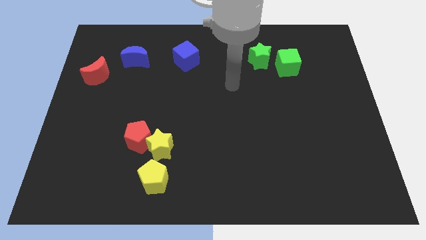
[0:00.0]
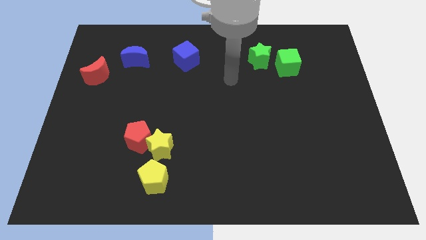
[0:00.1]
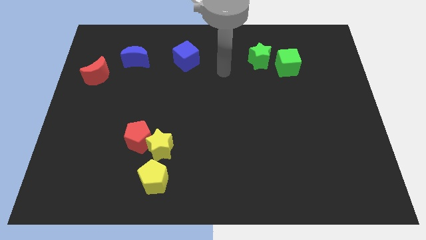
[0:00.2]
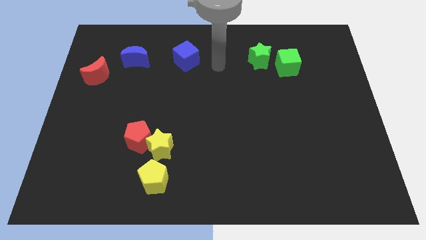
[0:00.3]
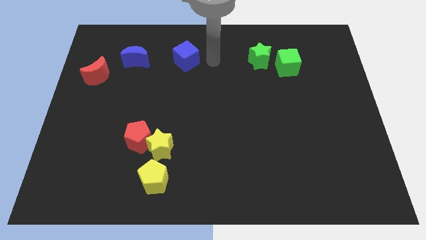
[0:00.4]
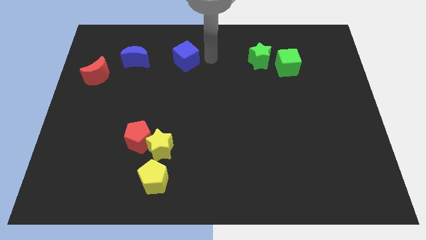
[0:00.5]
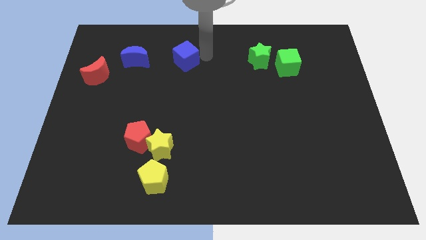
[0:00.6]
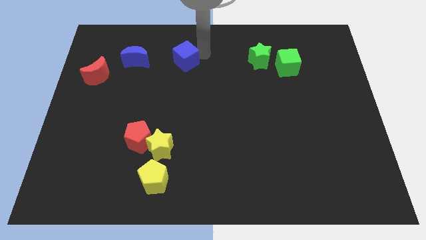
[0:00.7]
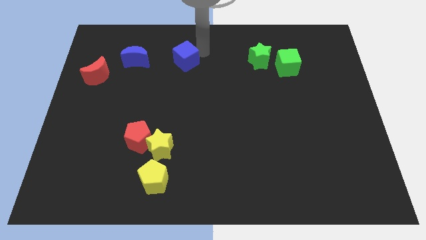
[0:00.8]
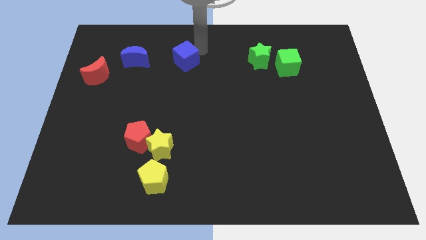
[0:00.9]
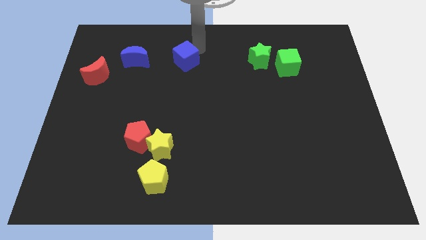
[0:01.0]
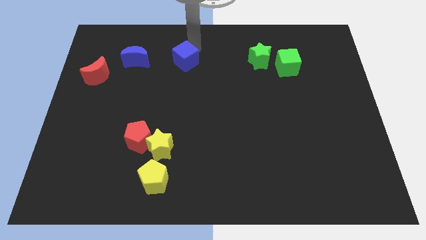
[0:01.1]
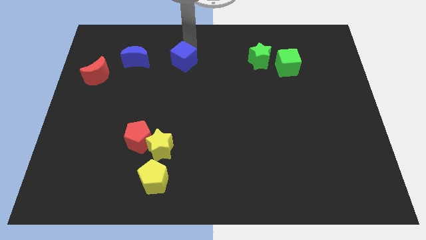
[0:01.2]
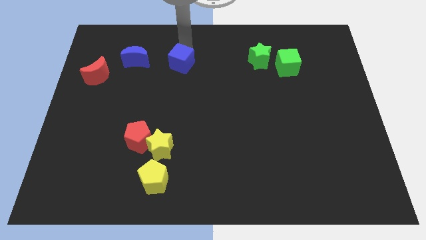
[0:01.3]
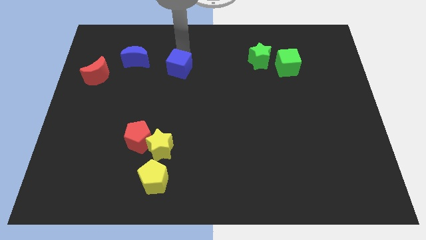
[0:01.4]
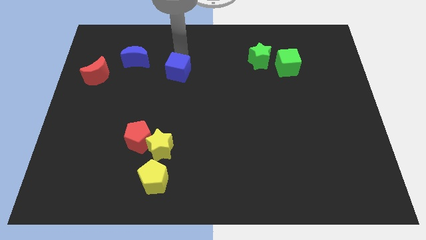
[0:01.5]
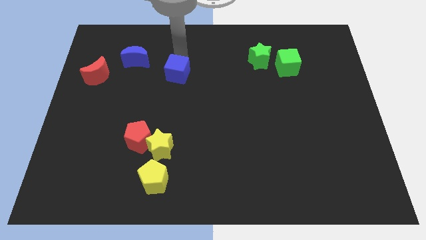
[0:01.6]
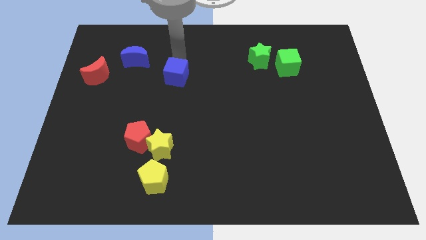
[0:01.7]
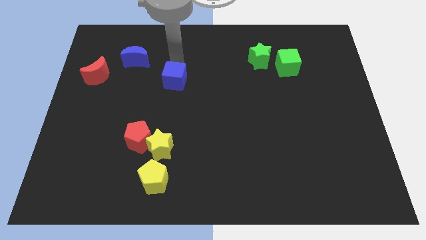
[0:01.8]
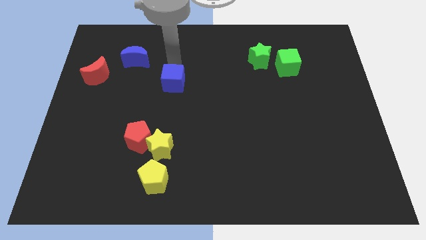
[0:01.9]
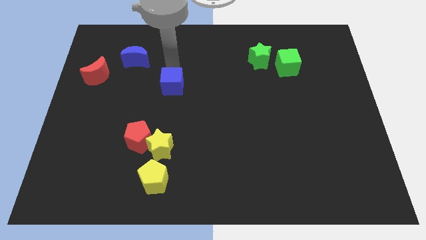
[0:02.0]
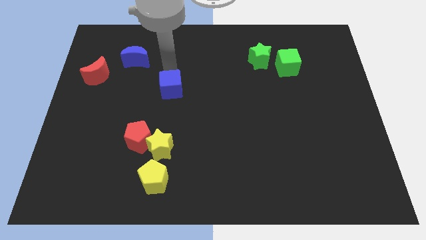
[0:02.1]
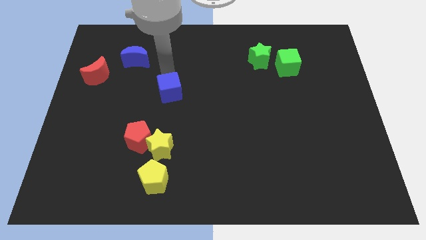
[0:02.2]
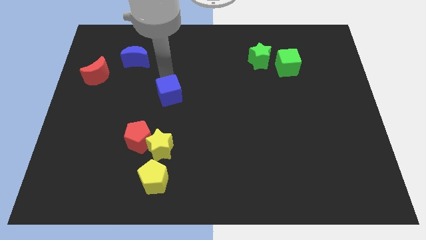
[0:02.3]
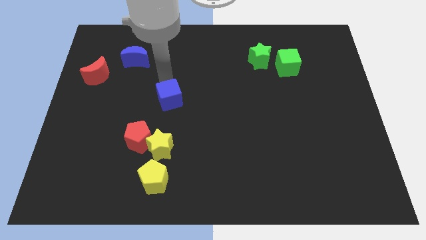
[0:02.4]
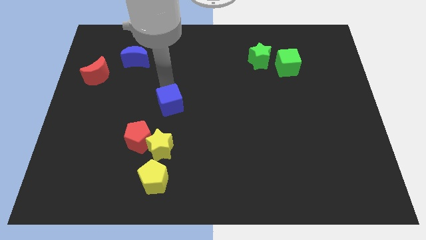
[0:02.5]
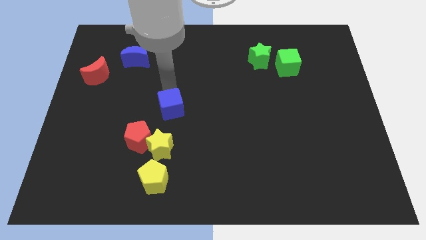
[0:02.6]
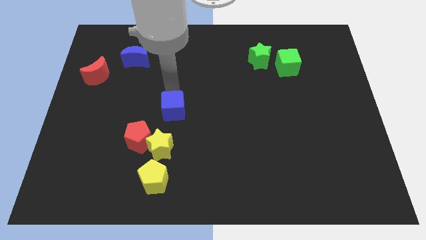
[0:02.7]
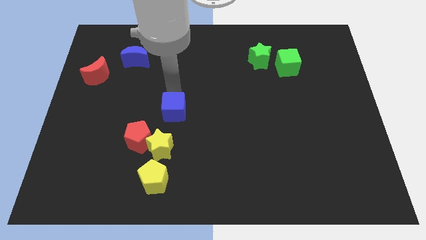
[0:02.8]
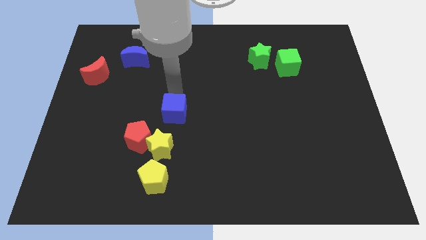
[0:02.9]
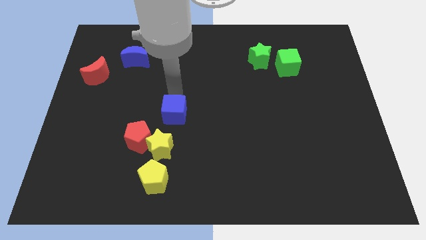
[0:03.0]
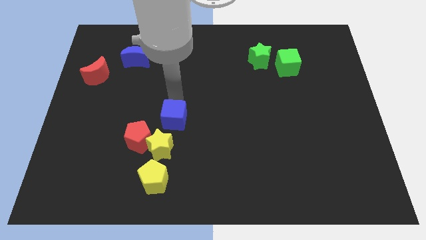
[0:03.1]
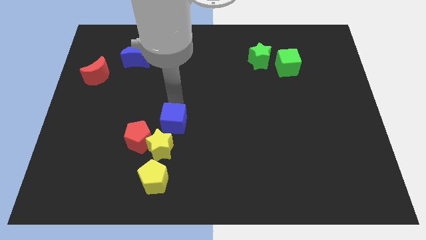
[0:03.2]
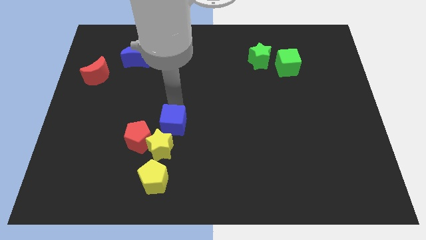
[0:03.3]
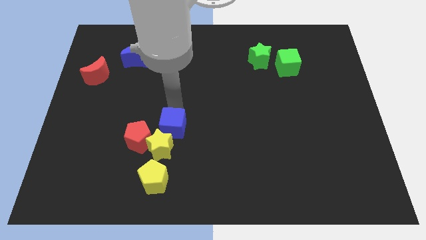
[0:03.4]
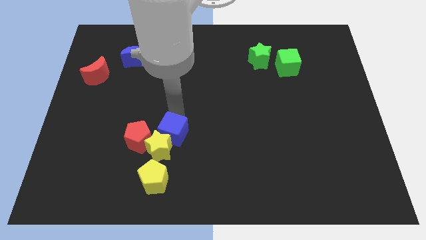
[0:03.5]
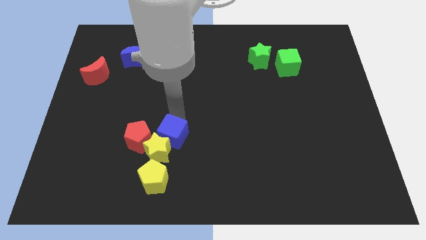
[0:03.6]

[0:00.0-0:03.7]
slide the blue cube to the yellow star

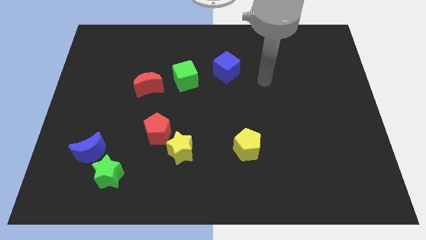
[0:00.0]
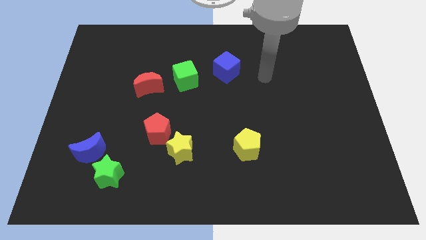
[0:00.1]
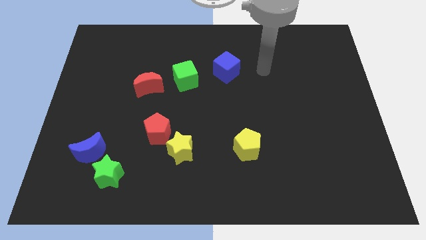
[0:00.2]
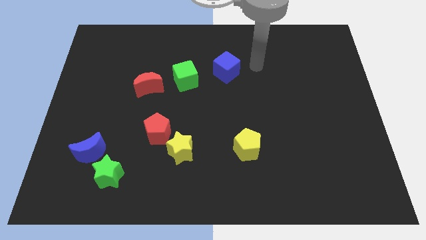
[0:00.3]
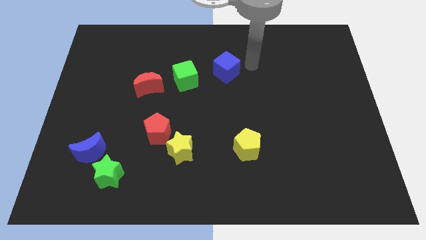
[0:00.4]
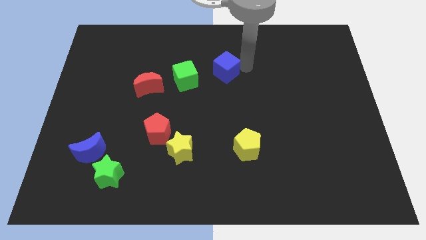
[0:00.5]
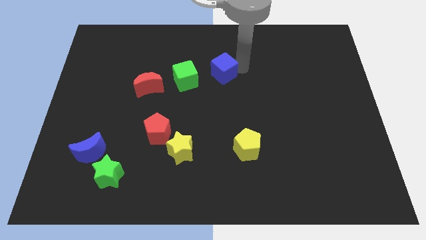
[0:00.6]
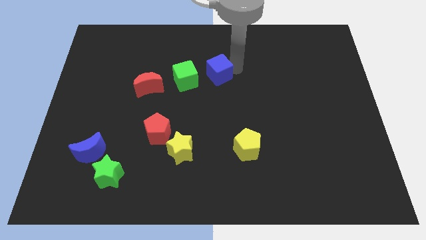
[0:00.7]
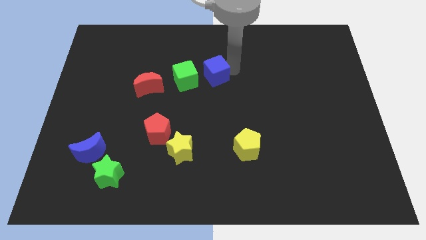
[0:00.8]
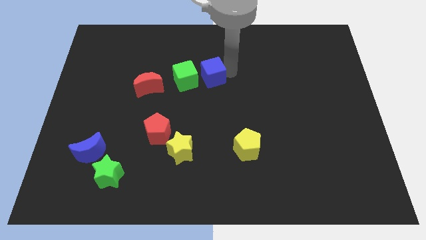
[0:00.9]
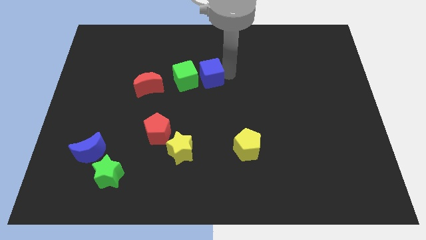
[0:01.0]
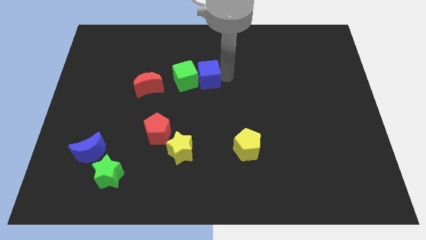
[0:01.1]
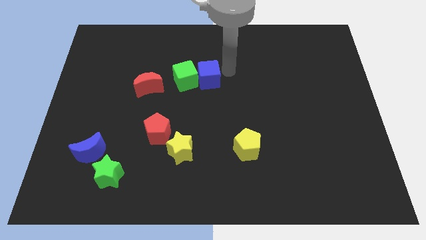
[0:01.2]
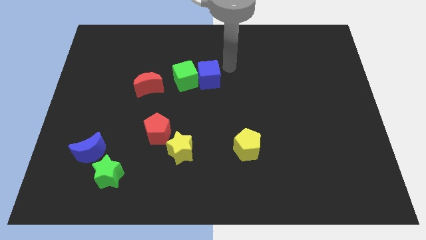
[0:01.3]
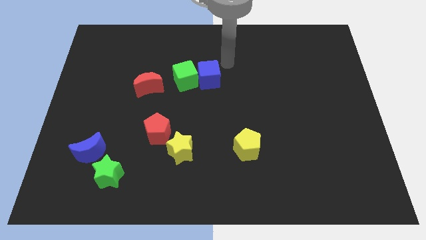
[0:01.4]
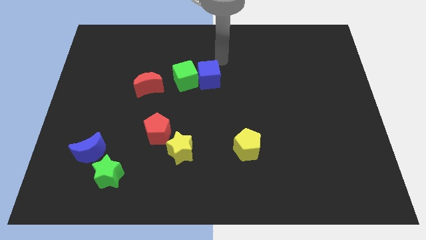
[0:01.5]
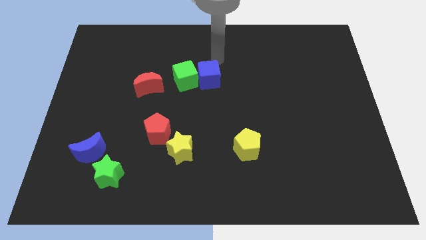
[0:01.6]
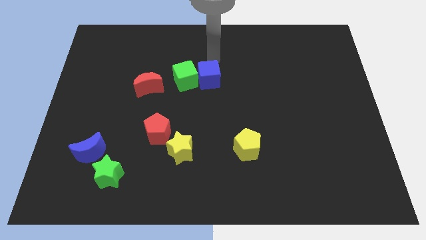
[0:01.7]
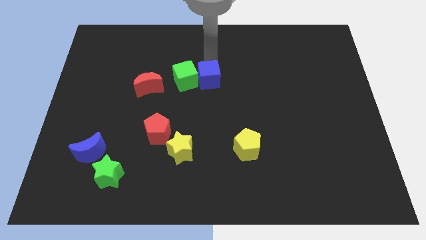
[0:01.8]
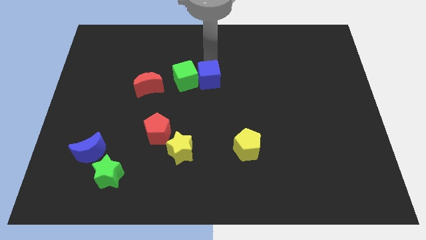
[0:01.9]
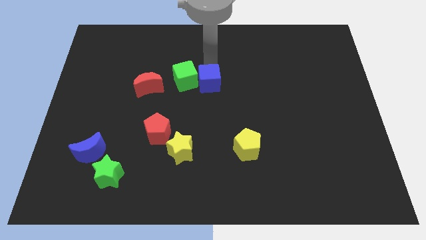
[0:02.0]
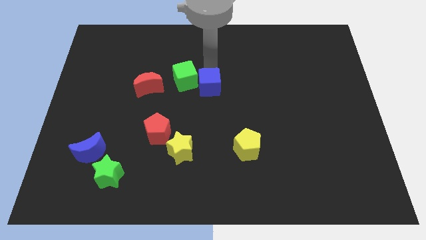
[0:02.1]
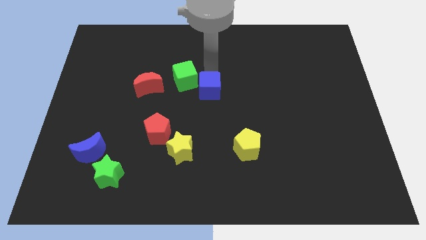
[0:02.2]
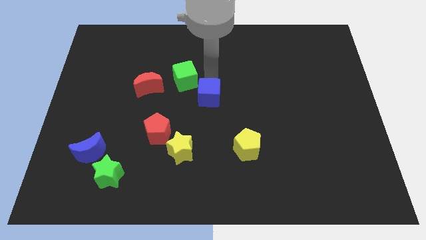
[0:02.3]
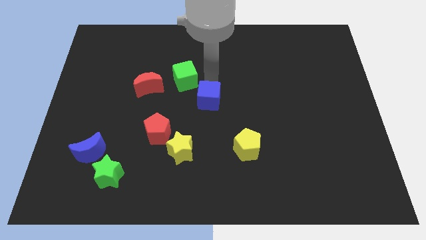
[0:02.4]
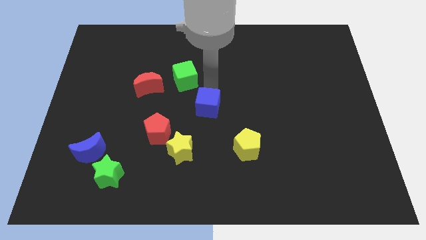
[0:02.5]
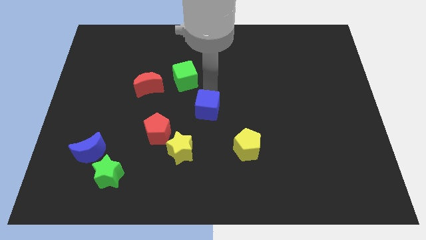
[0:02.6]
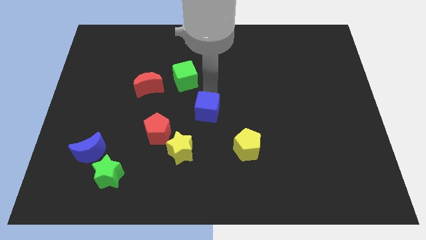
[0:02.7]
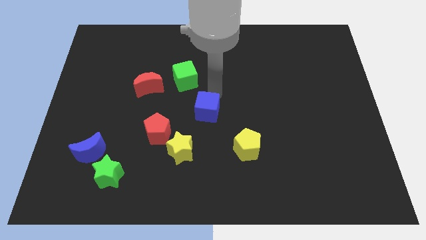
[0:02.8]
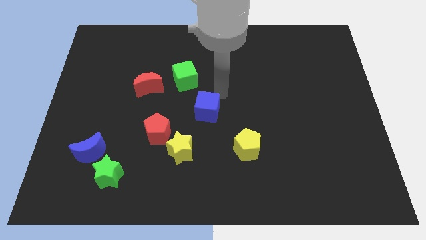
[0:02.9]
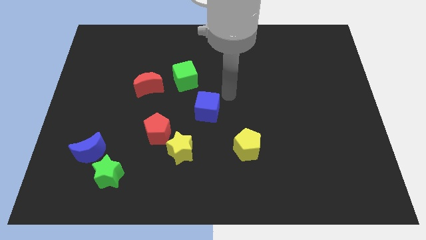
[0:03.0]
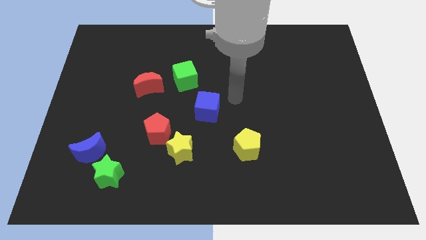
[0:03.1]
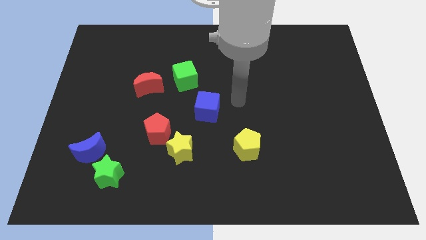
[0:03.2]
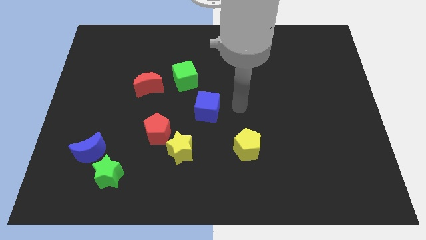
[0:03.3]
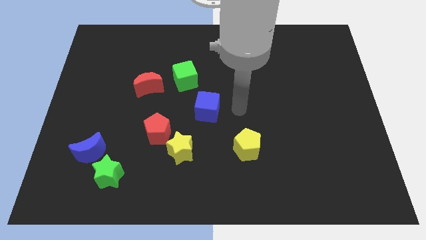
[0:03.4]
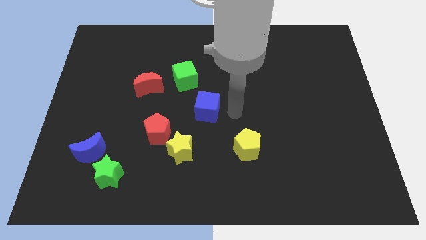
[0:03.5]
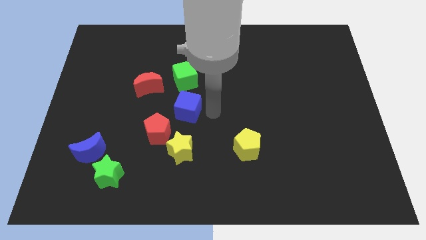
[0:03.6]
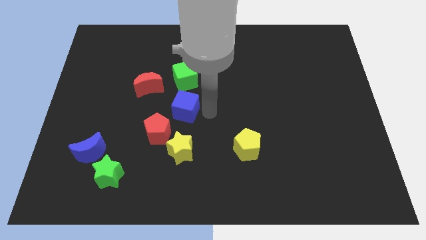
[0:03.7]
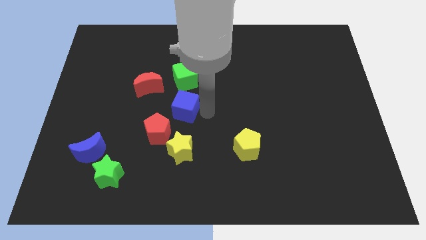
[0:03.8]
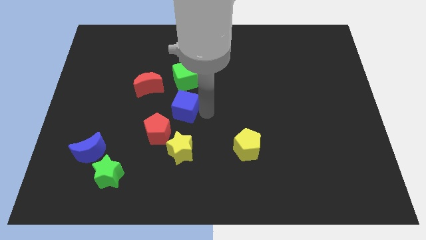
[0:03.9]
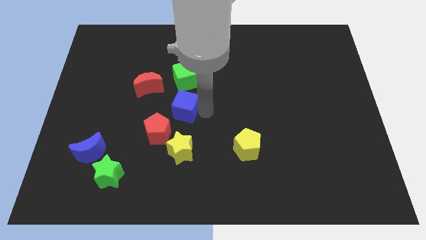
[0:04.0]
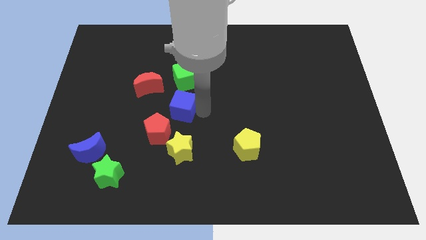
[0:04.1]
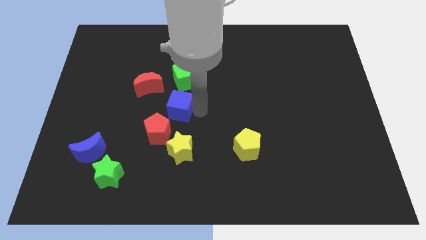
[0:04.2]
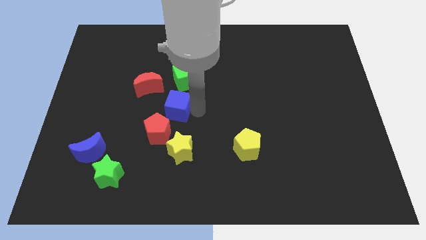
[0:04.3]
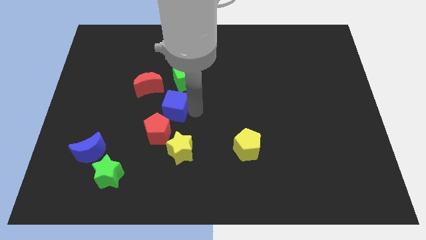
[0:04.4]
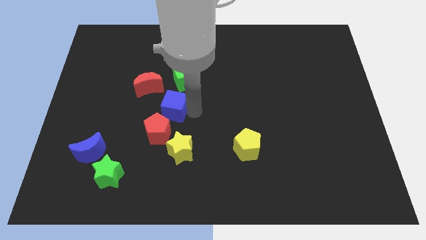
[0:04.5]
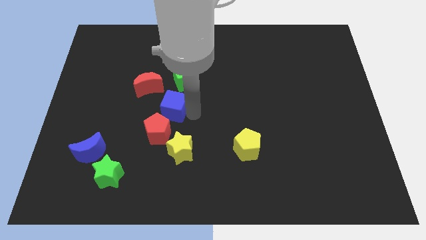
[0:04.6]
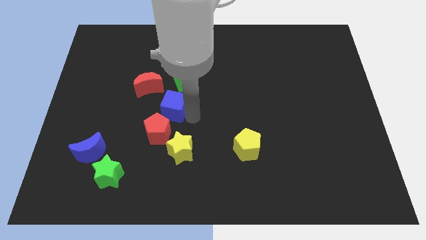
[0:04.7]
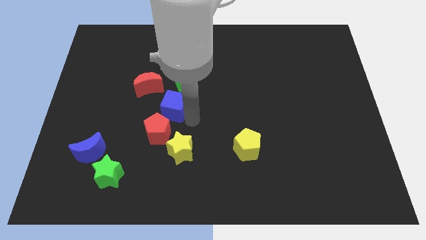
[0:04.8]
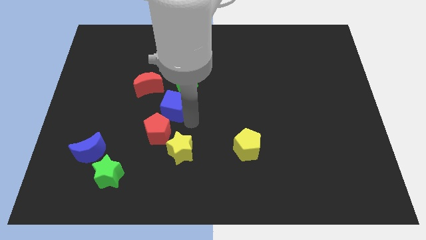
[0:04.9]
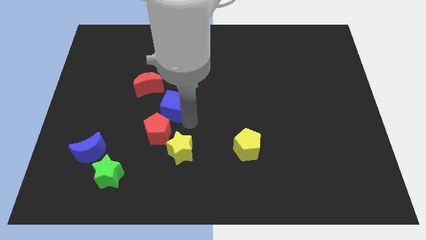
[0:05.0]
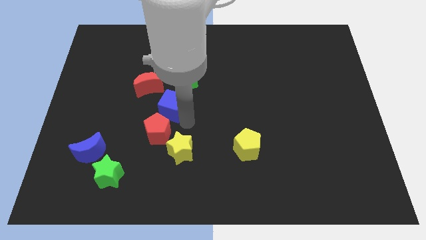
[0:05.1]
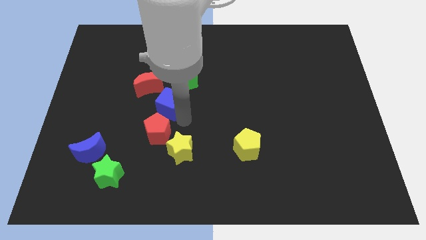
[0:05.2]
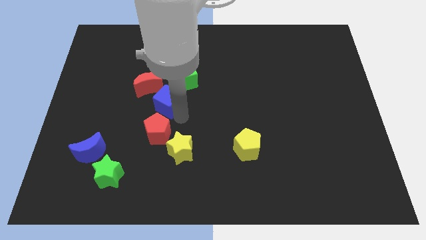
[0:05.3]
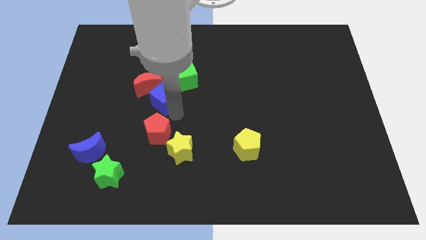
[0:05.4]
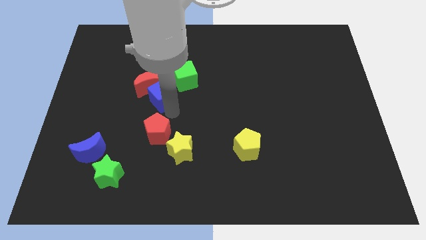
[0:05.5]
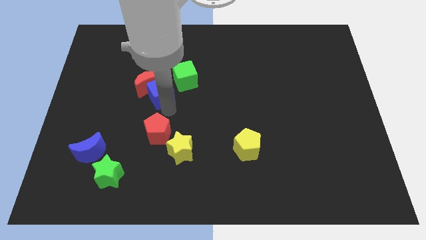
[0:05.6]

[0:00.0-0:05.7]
slide the blue cube to the red moon
